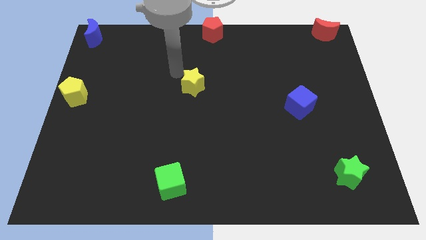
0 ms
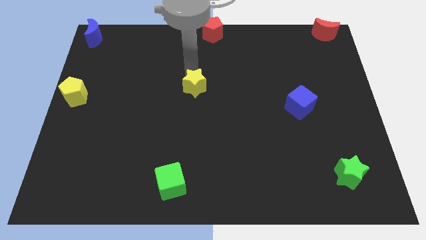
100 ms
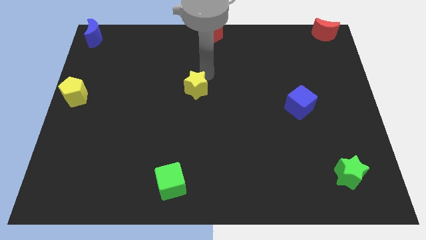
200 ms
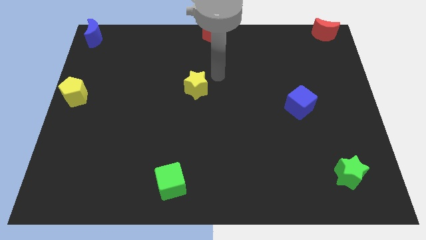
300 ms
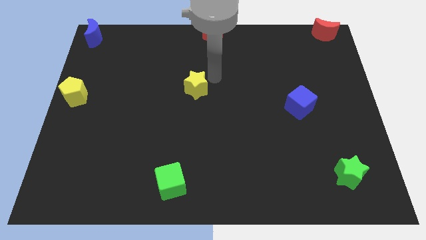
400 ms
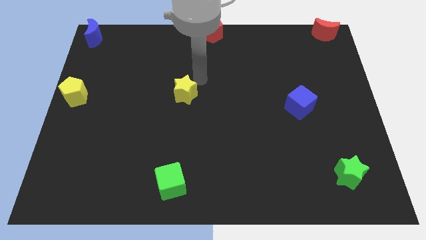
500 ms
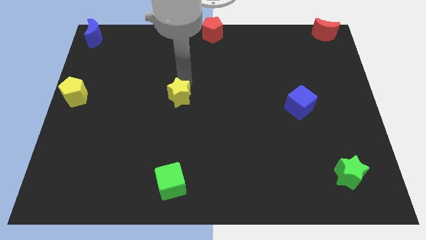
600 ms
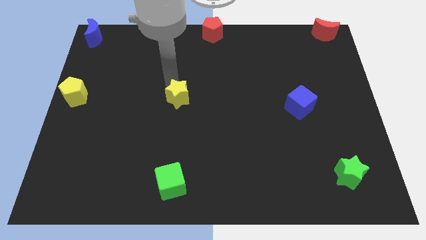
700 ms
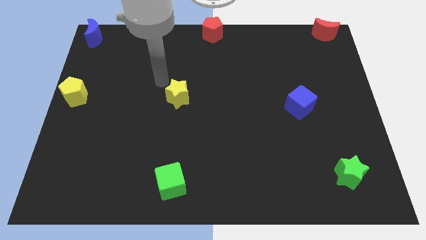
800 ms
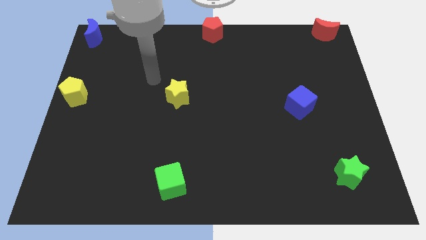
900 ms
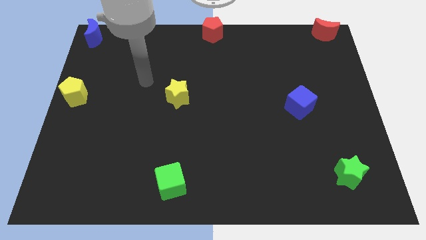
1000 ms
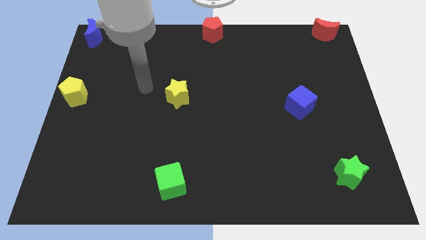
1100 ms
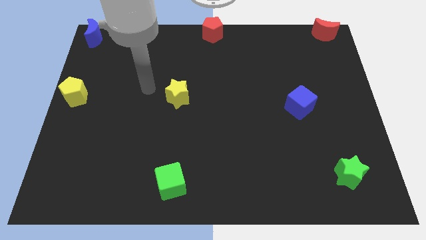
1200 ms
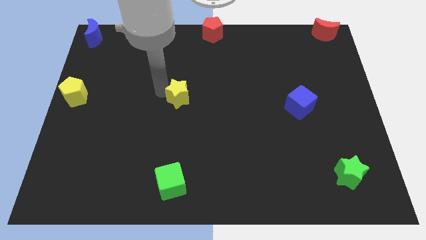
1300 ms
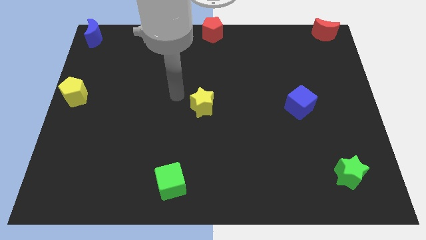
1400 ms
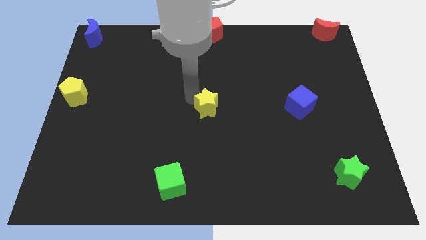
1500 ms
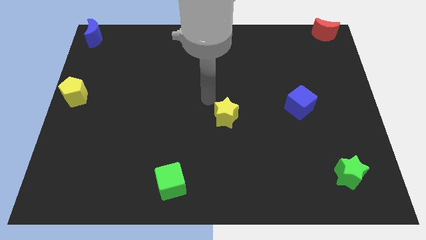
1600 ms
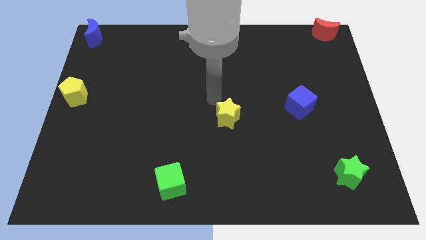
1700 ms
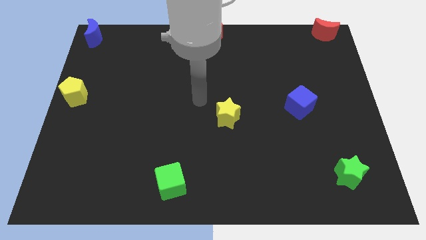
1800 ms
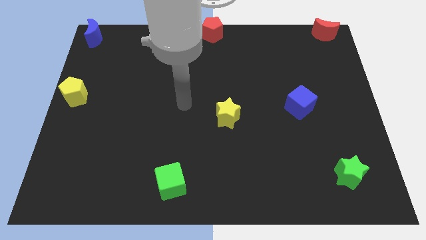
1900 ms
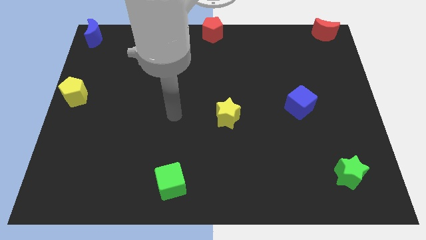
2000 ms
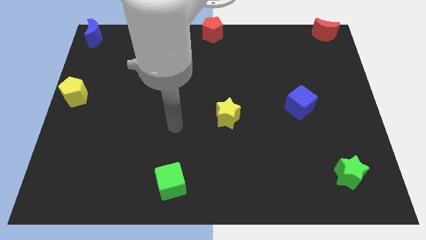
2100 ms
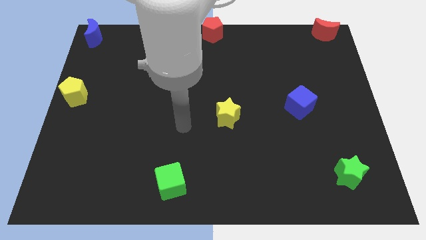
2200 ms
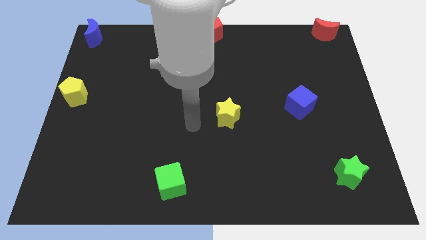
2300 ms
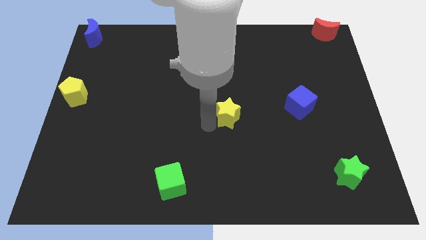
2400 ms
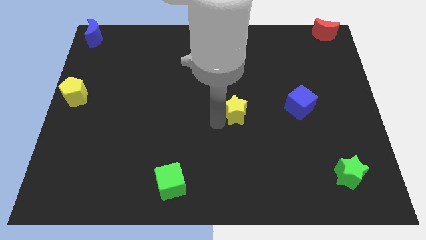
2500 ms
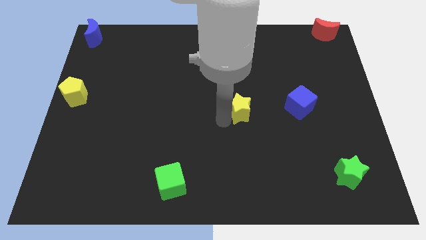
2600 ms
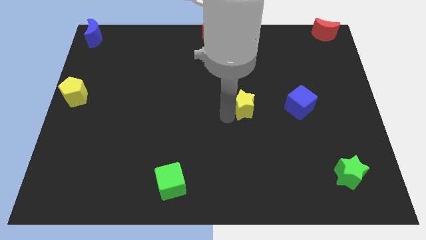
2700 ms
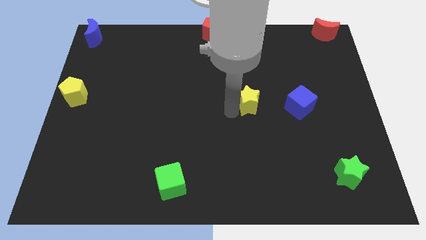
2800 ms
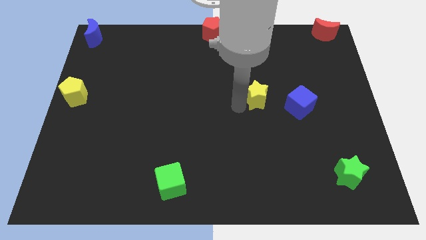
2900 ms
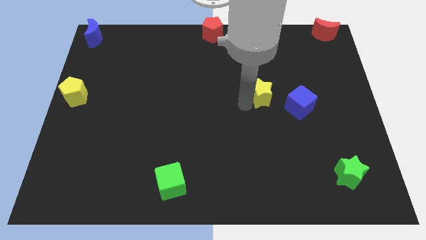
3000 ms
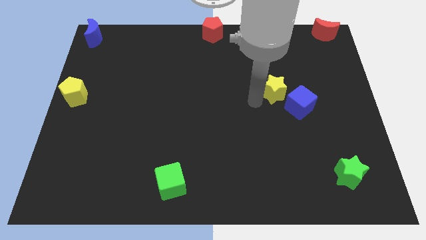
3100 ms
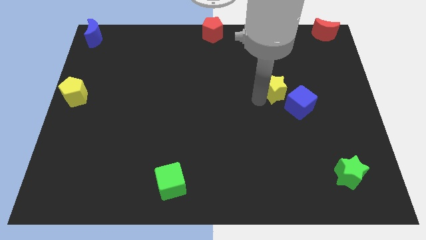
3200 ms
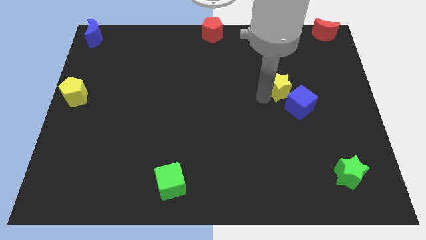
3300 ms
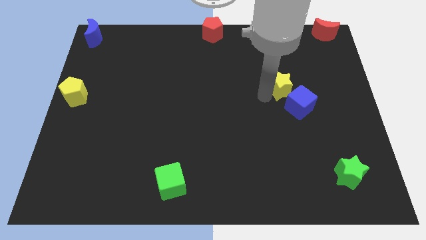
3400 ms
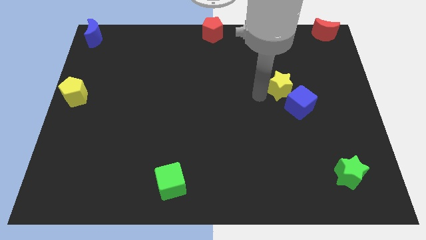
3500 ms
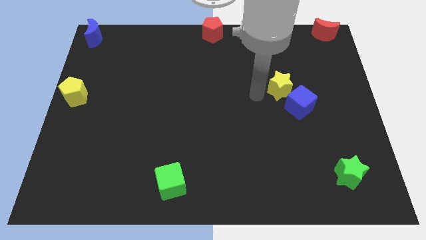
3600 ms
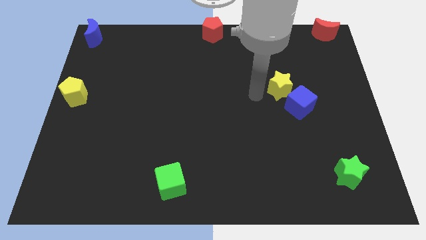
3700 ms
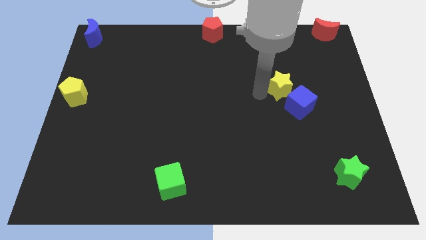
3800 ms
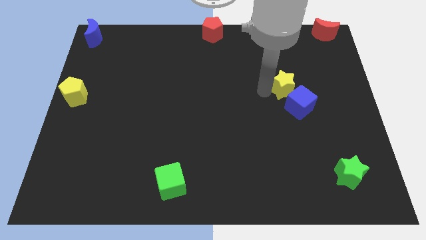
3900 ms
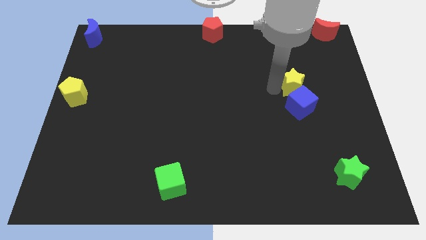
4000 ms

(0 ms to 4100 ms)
move yellow star left above blue cube

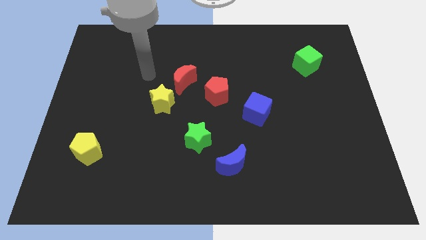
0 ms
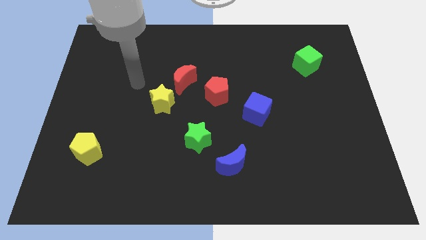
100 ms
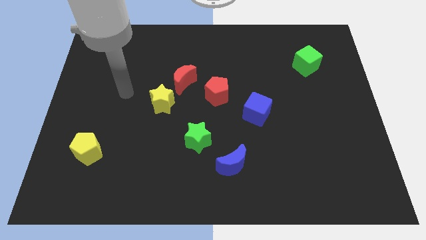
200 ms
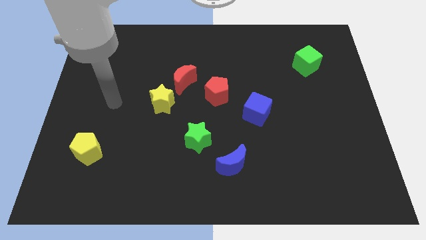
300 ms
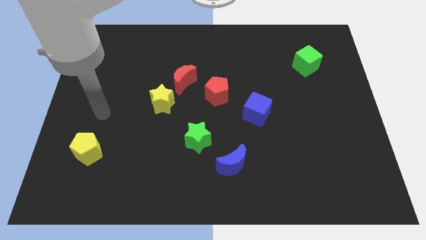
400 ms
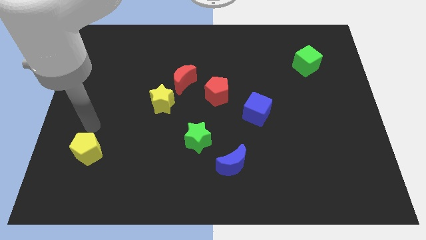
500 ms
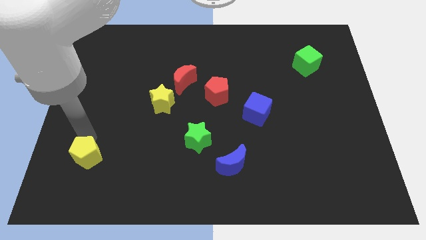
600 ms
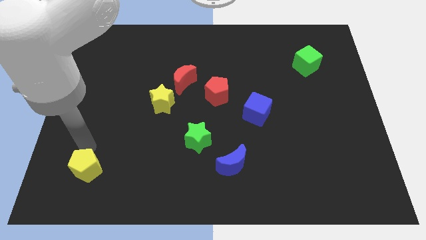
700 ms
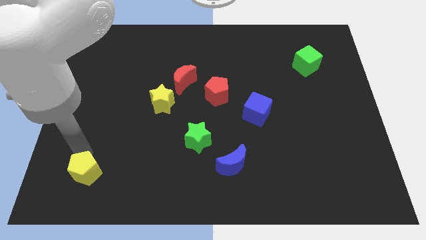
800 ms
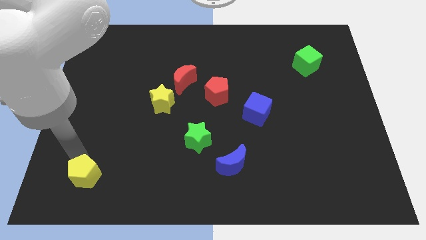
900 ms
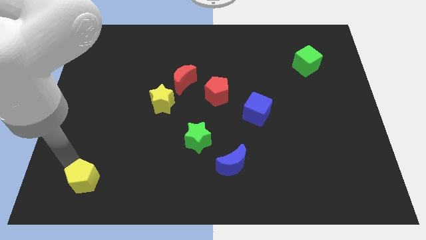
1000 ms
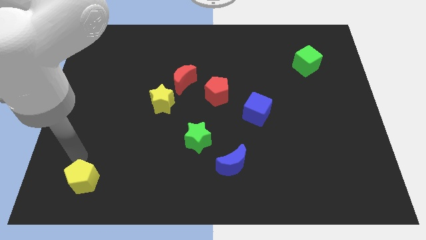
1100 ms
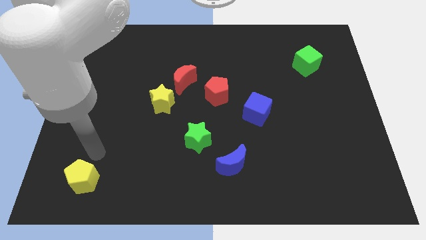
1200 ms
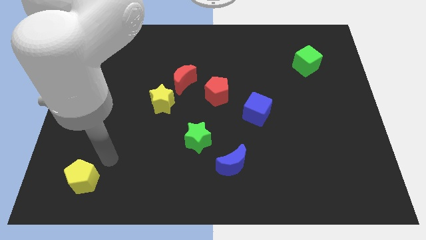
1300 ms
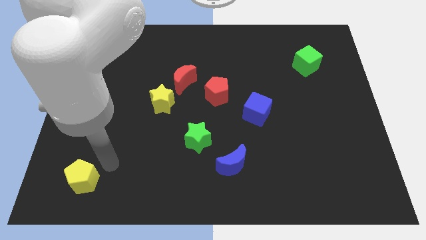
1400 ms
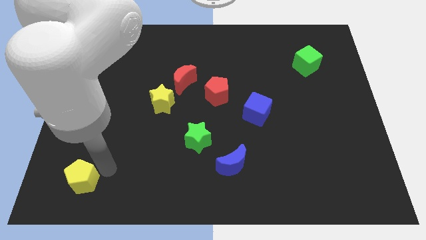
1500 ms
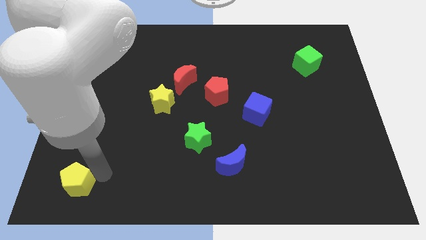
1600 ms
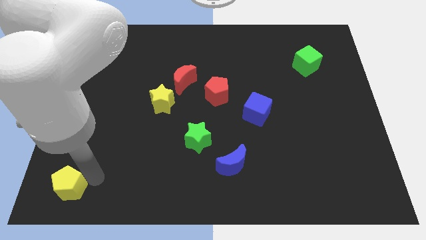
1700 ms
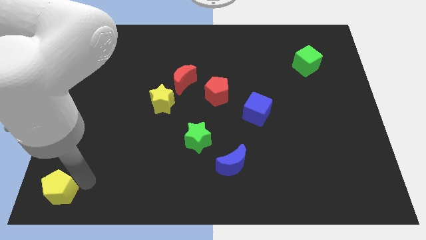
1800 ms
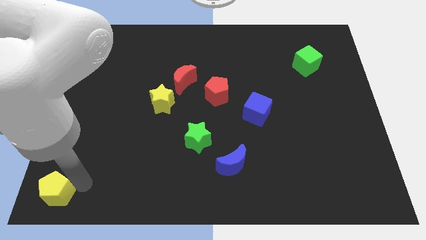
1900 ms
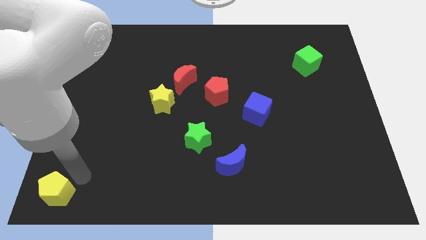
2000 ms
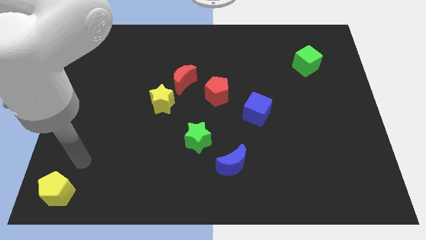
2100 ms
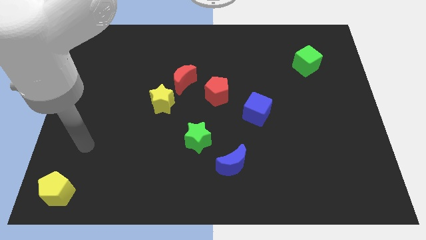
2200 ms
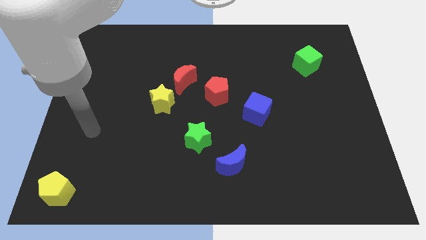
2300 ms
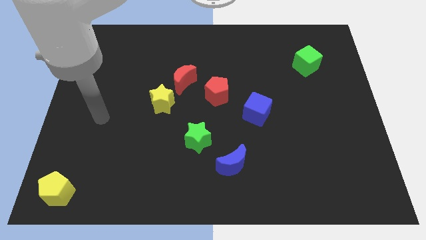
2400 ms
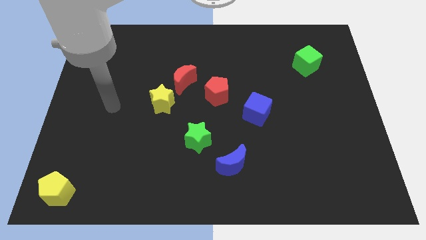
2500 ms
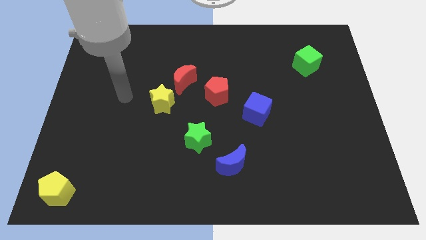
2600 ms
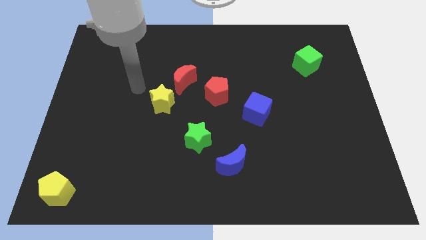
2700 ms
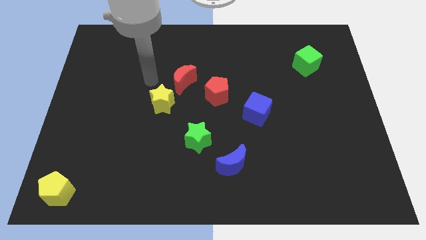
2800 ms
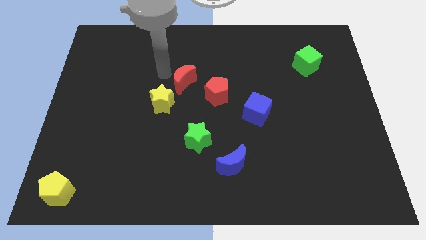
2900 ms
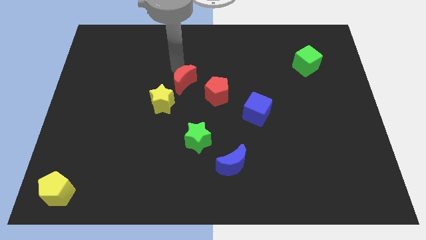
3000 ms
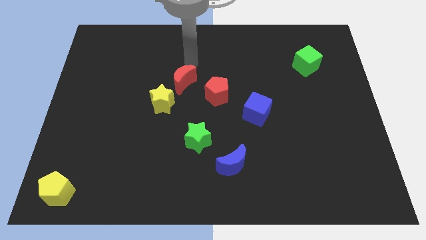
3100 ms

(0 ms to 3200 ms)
move the yellow pentagon towards the bottom left corner of the board

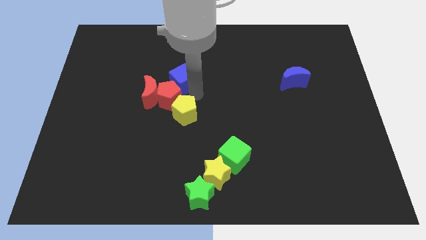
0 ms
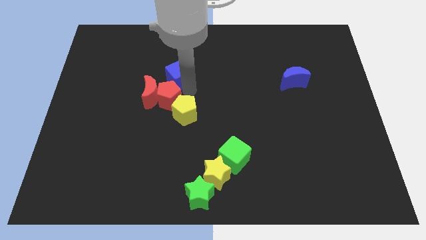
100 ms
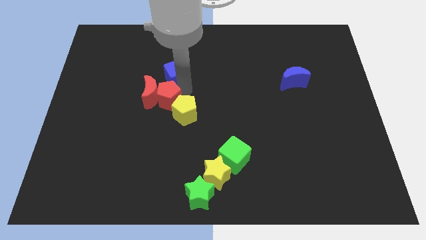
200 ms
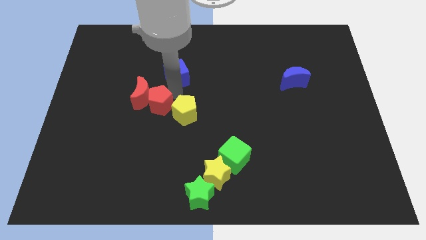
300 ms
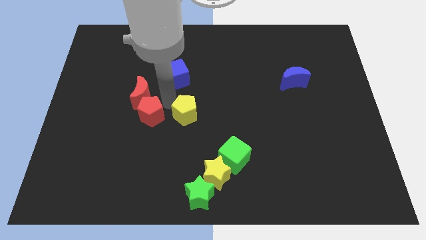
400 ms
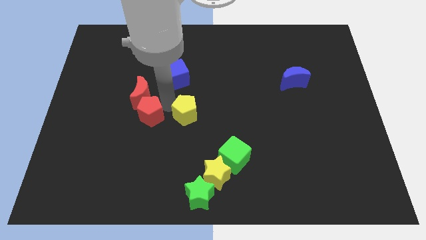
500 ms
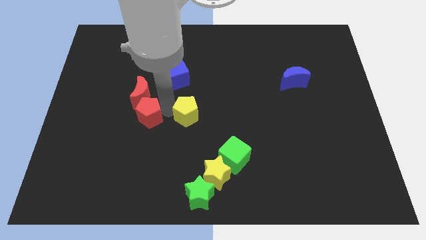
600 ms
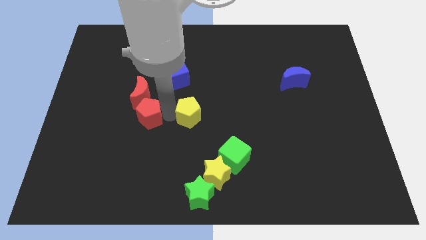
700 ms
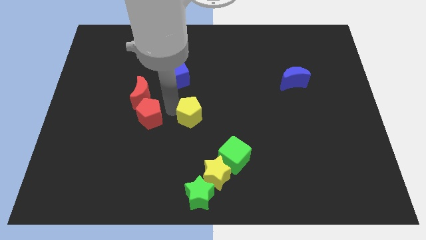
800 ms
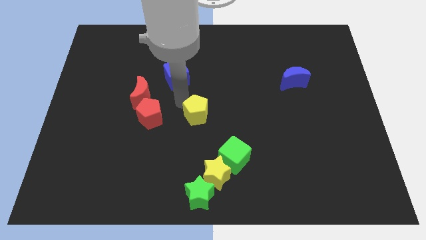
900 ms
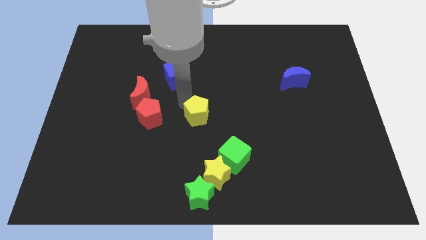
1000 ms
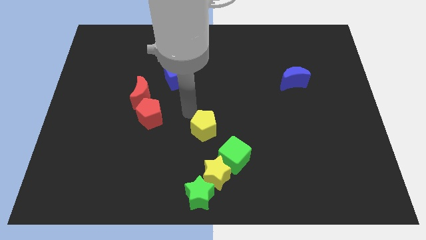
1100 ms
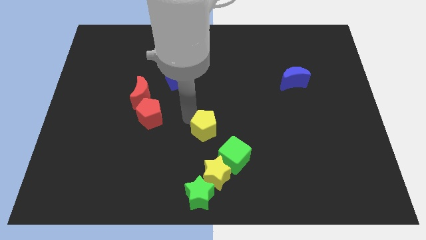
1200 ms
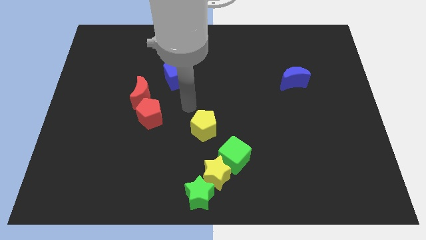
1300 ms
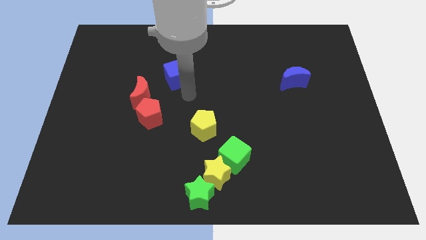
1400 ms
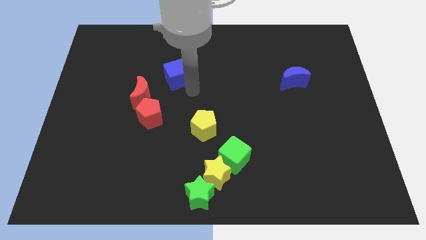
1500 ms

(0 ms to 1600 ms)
separate the red pentagon and yellow pentagon to the left center
